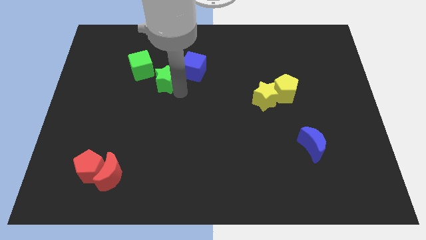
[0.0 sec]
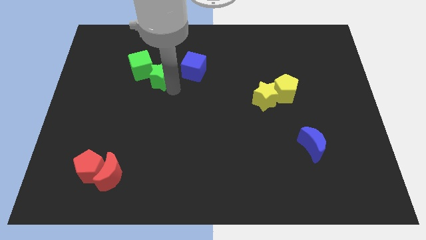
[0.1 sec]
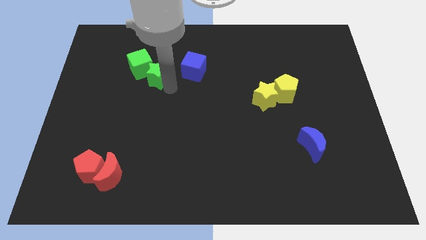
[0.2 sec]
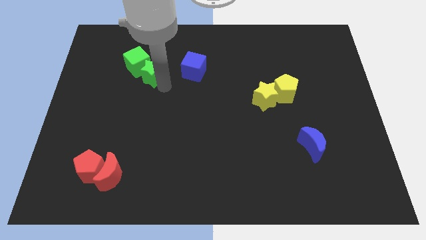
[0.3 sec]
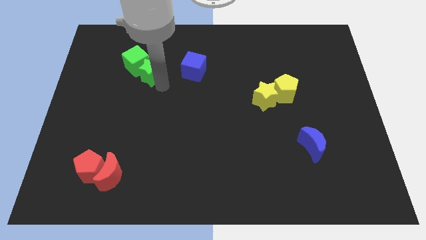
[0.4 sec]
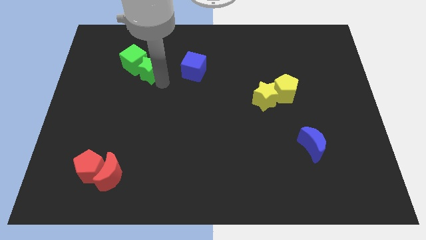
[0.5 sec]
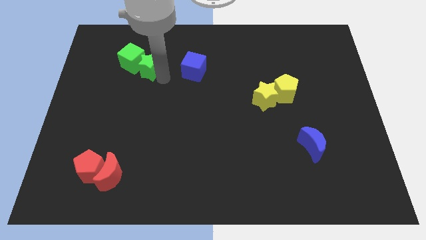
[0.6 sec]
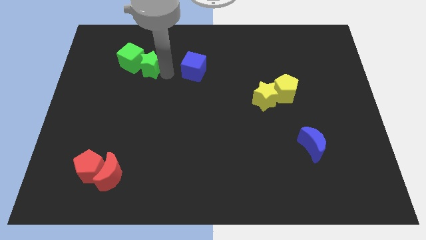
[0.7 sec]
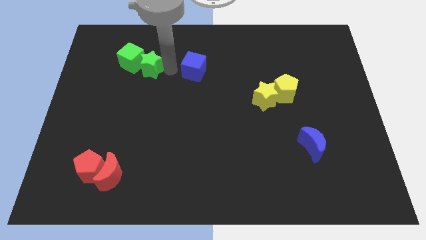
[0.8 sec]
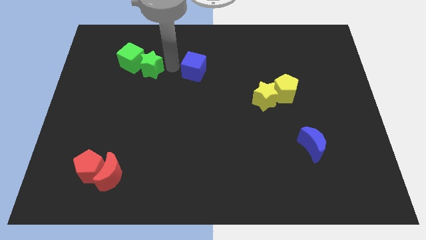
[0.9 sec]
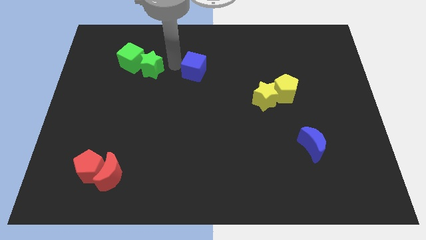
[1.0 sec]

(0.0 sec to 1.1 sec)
push the green star into the green cube

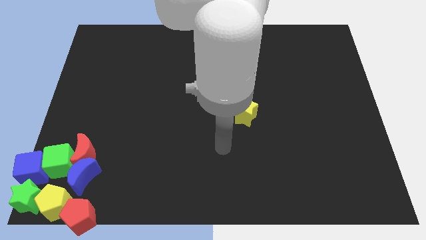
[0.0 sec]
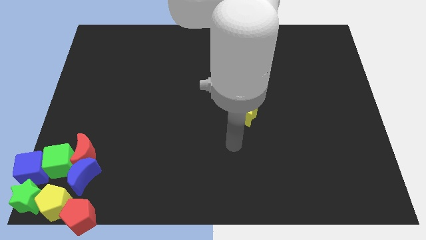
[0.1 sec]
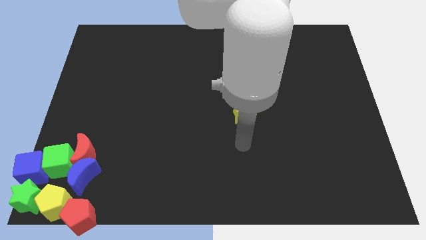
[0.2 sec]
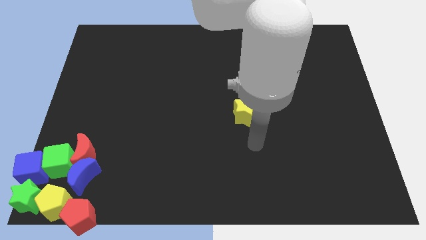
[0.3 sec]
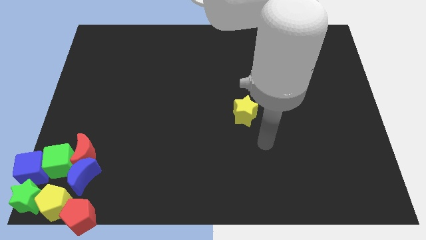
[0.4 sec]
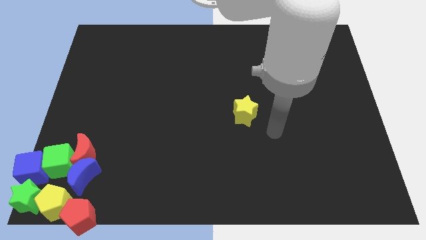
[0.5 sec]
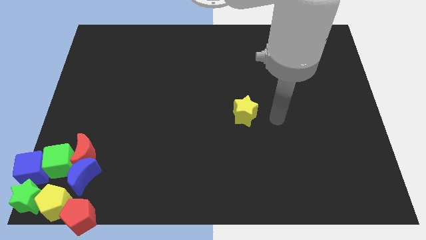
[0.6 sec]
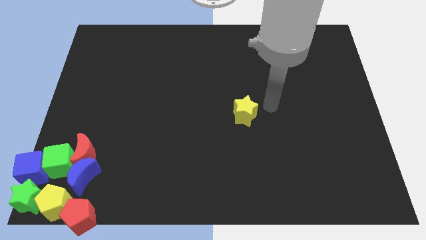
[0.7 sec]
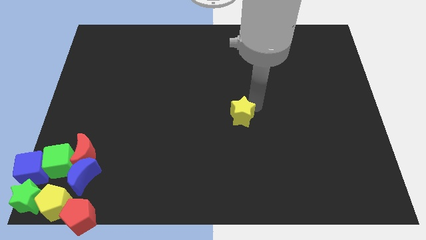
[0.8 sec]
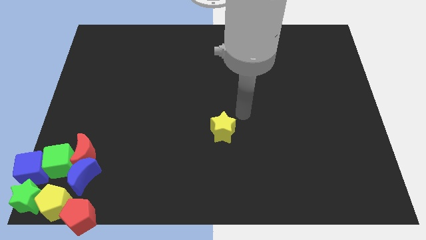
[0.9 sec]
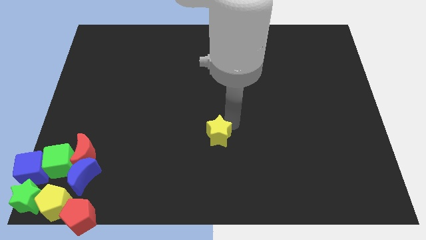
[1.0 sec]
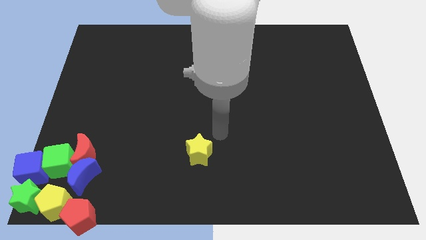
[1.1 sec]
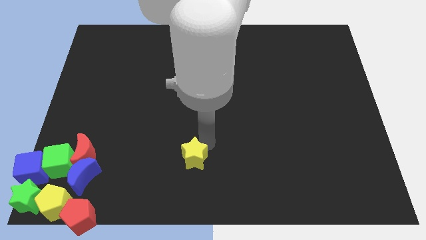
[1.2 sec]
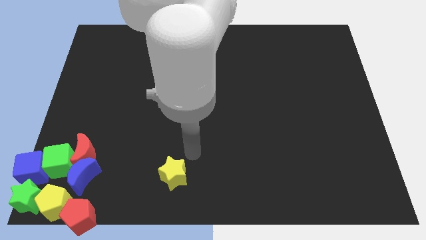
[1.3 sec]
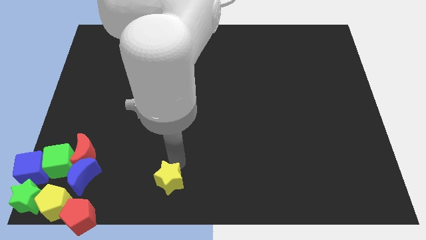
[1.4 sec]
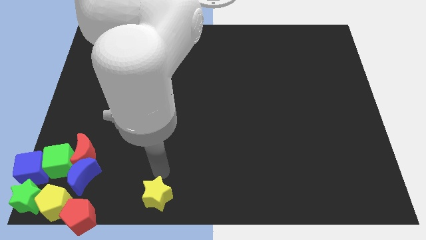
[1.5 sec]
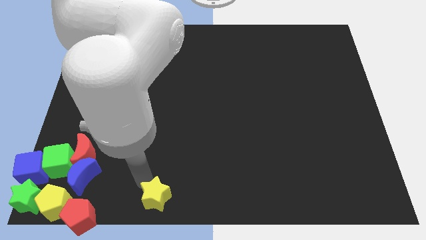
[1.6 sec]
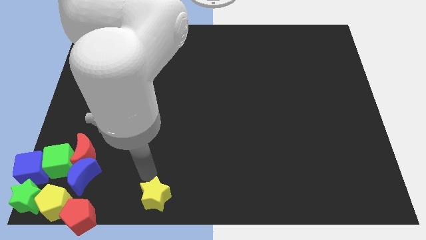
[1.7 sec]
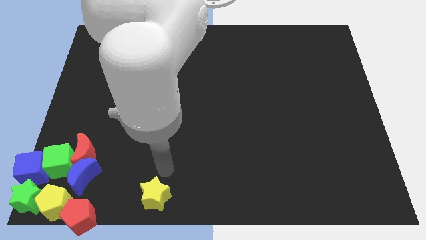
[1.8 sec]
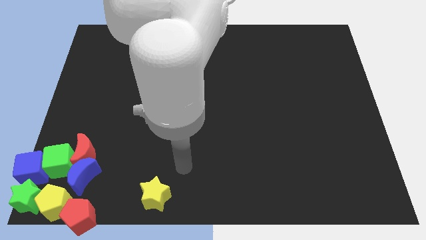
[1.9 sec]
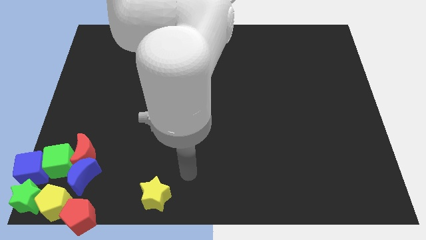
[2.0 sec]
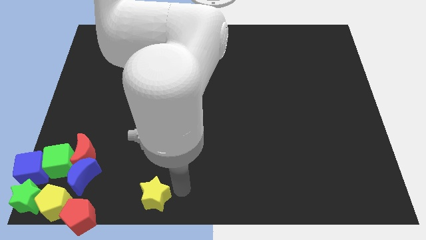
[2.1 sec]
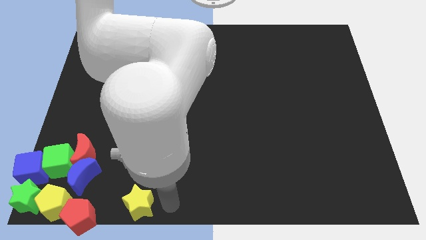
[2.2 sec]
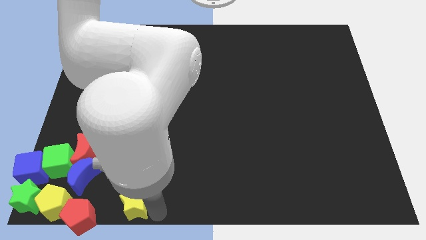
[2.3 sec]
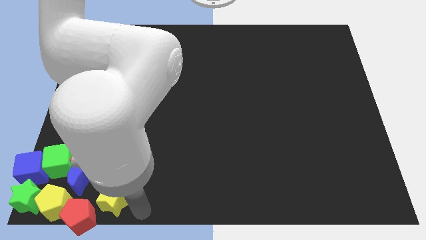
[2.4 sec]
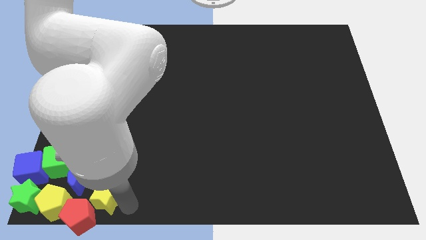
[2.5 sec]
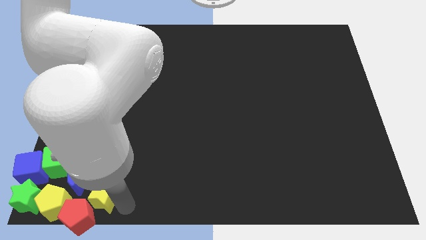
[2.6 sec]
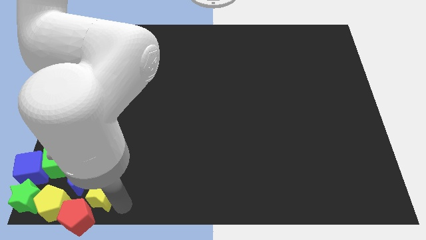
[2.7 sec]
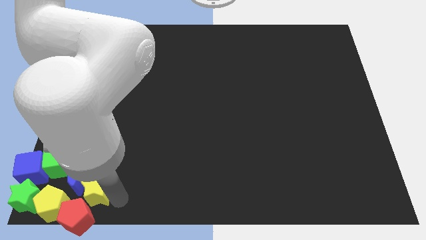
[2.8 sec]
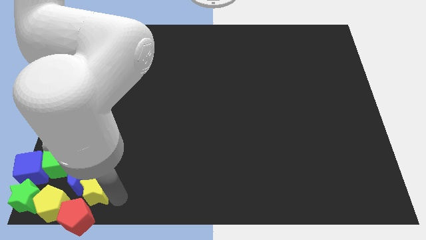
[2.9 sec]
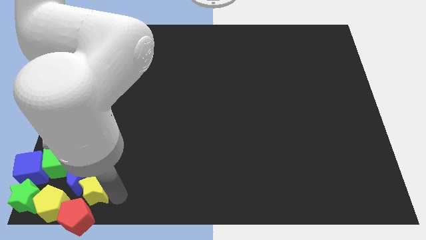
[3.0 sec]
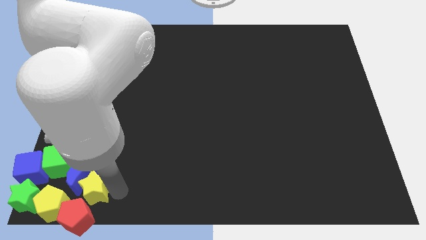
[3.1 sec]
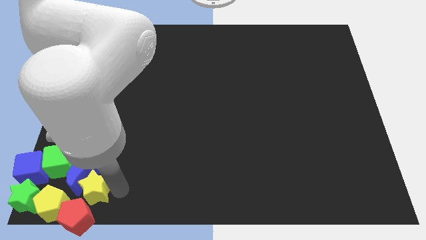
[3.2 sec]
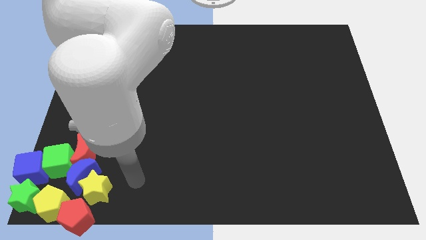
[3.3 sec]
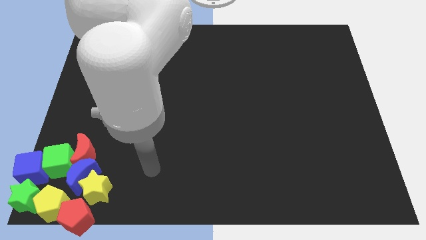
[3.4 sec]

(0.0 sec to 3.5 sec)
push the yellow star into the group of blocks

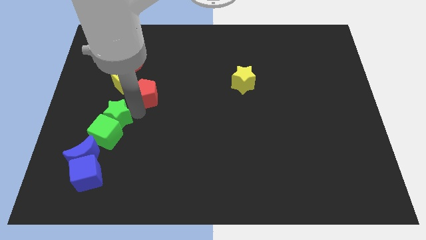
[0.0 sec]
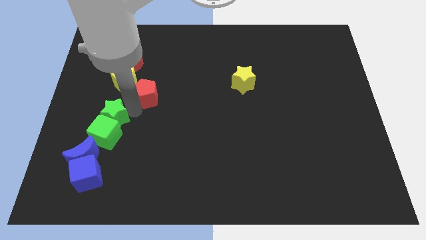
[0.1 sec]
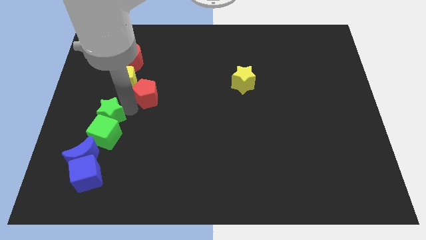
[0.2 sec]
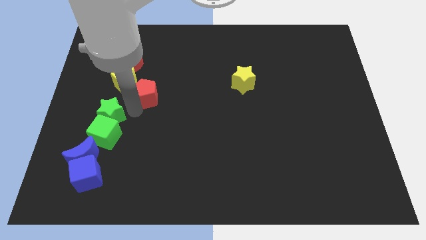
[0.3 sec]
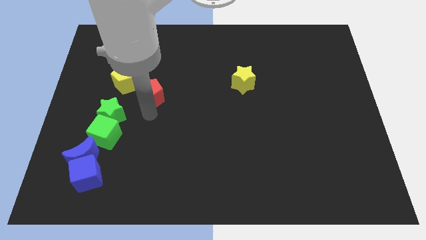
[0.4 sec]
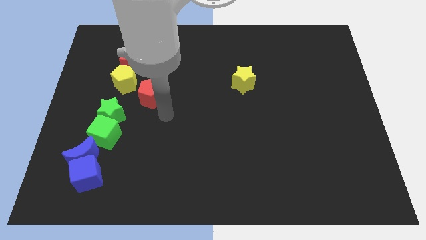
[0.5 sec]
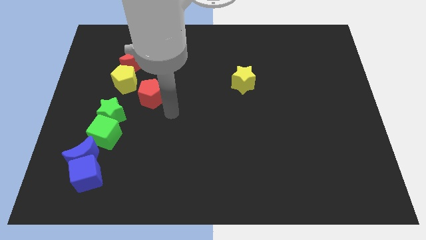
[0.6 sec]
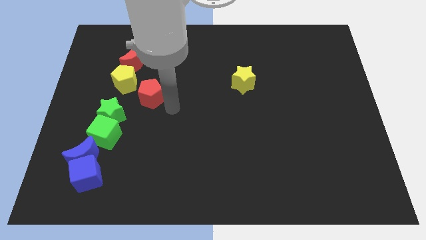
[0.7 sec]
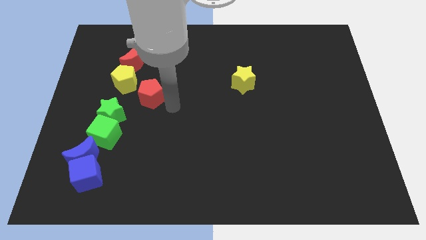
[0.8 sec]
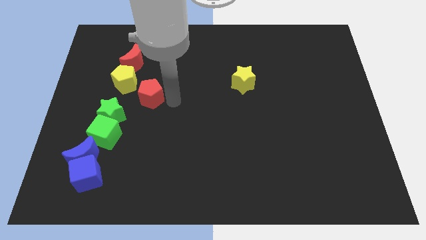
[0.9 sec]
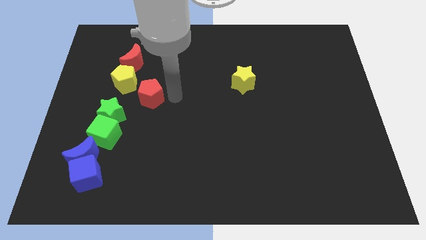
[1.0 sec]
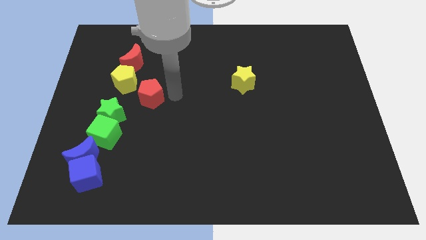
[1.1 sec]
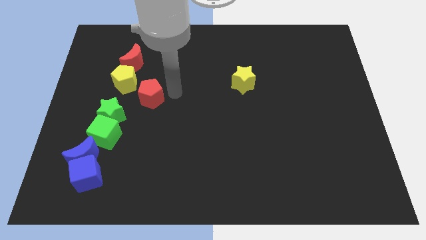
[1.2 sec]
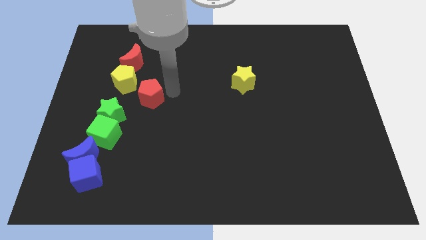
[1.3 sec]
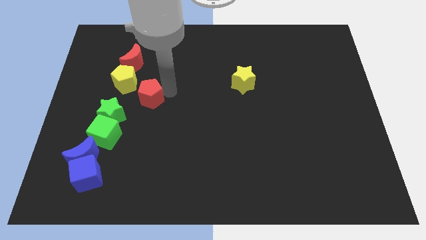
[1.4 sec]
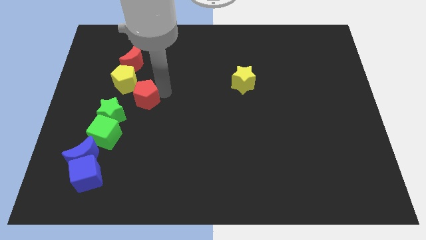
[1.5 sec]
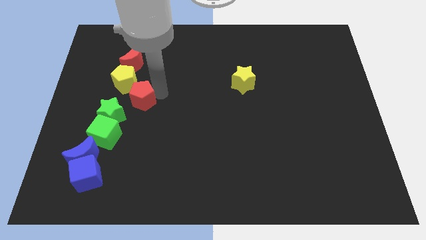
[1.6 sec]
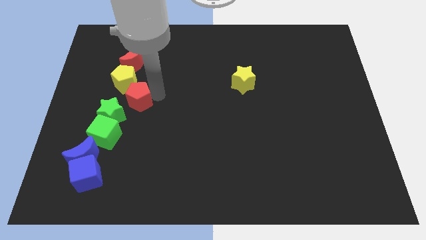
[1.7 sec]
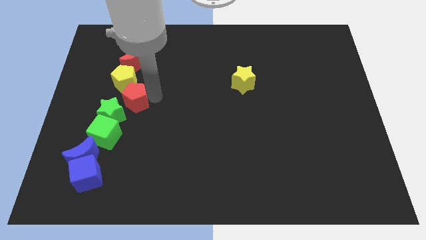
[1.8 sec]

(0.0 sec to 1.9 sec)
slightly move the green cube and green star towards the blue crescent

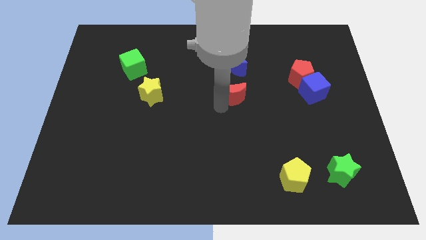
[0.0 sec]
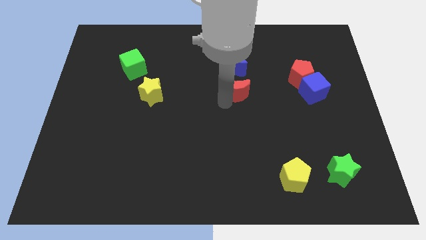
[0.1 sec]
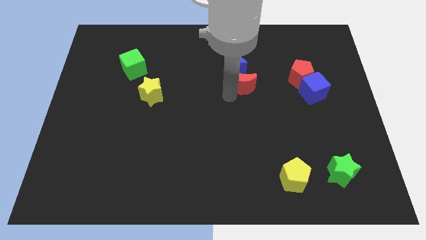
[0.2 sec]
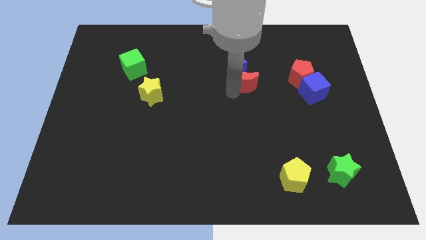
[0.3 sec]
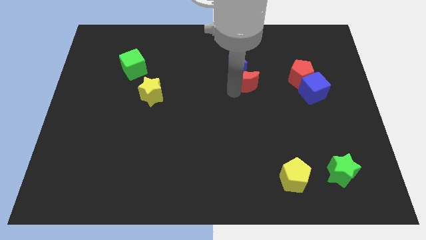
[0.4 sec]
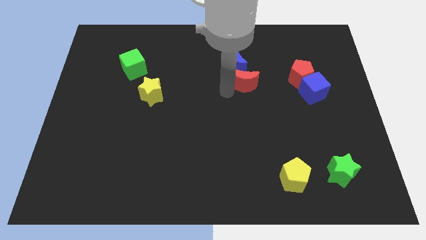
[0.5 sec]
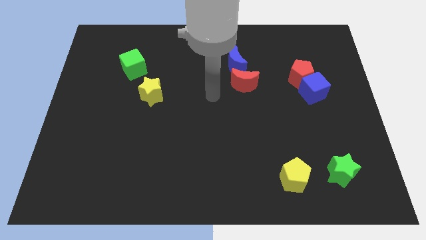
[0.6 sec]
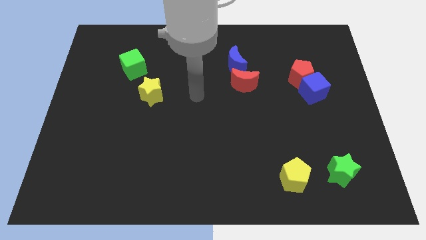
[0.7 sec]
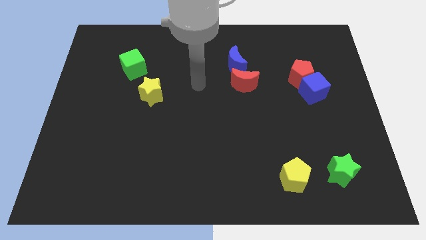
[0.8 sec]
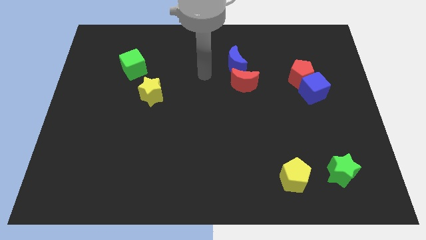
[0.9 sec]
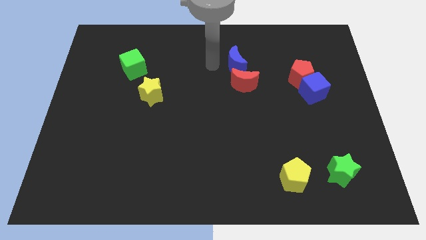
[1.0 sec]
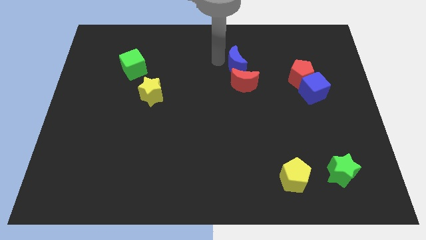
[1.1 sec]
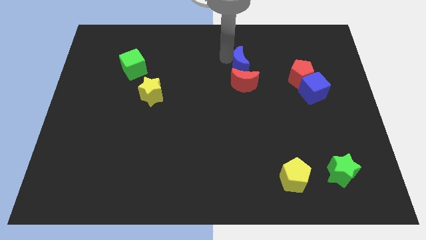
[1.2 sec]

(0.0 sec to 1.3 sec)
move the red moon below the blue moon

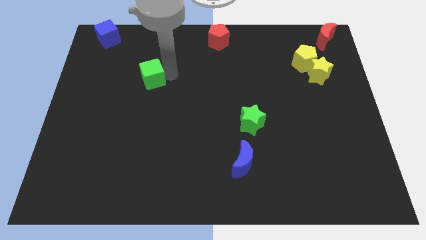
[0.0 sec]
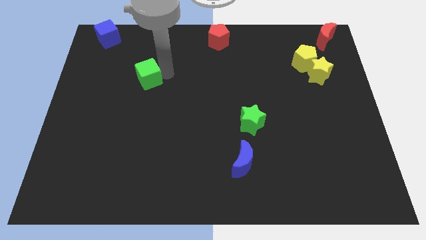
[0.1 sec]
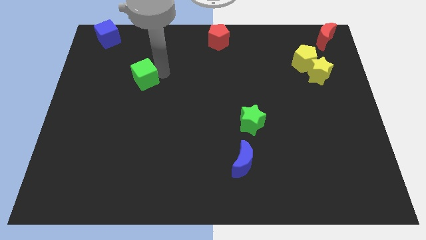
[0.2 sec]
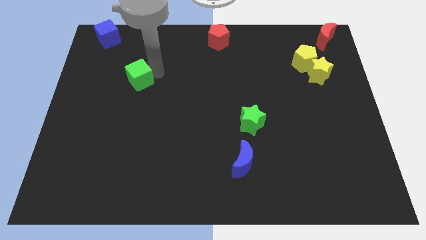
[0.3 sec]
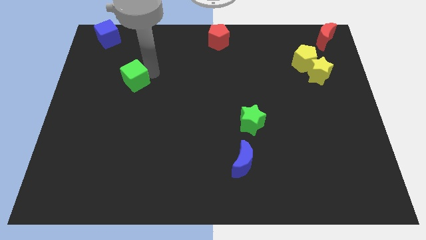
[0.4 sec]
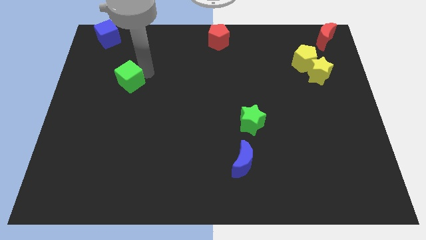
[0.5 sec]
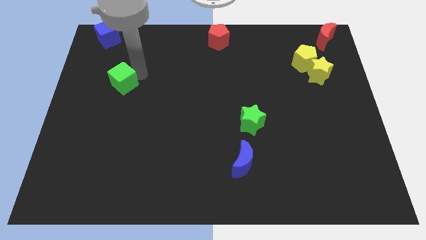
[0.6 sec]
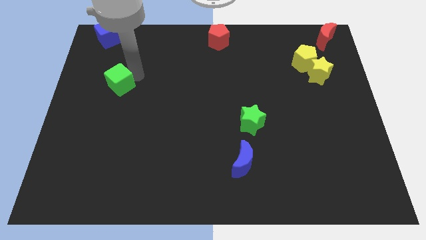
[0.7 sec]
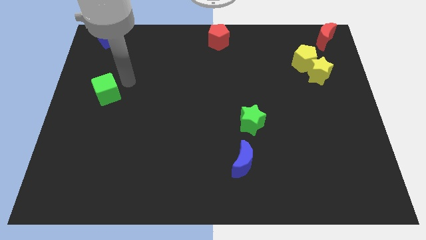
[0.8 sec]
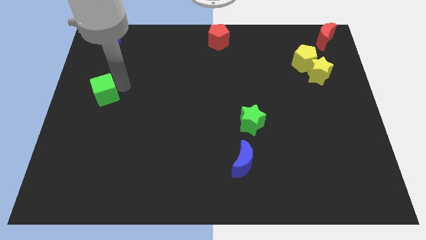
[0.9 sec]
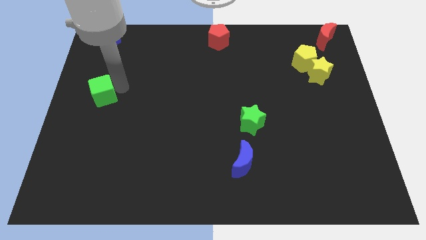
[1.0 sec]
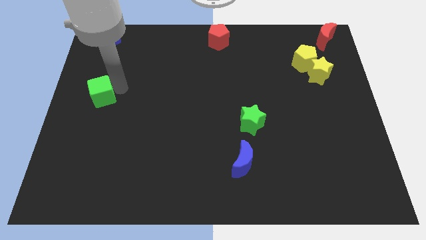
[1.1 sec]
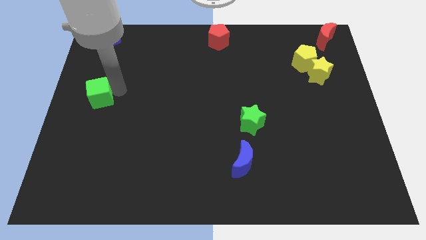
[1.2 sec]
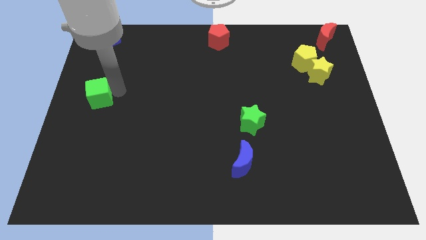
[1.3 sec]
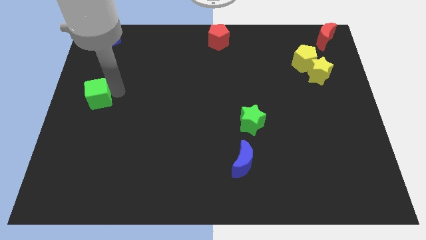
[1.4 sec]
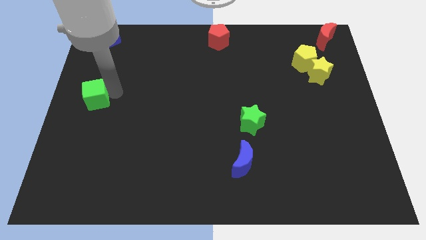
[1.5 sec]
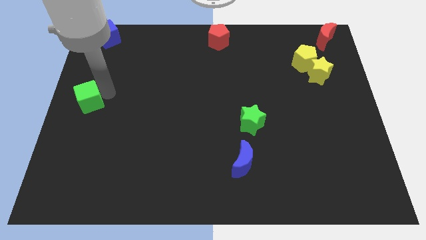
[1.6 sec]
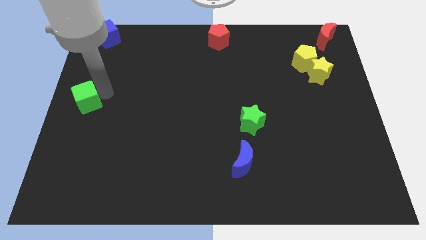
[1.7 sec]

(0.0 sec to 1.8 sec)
move the green cube to the bottom of the blue cube
